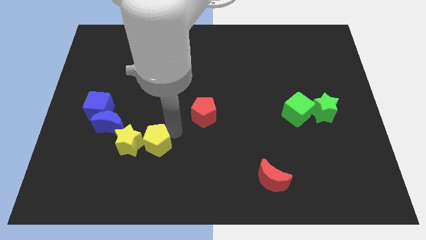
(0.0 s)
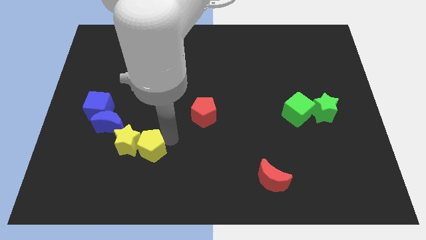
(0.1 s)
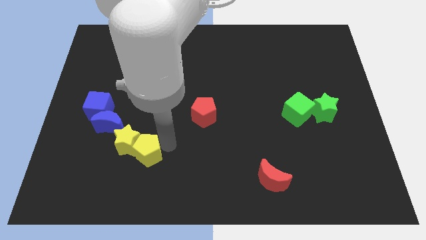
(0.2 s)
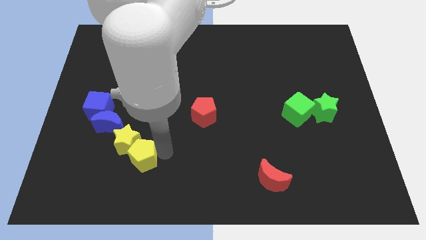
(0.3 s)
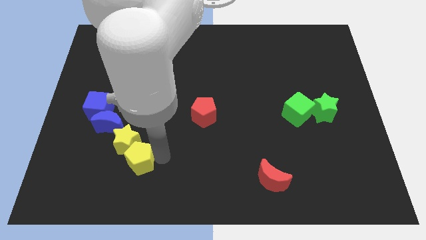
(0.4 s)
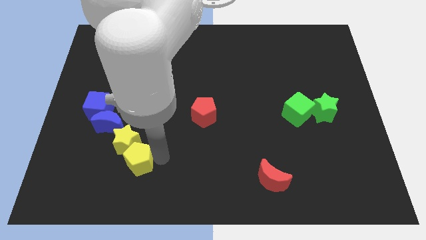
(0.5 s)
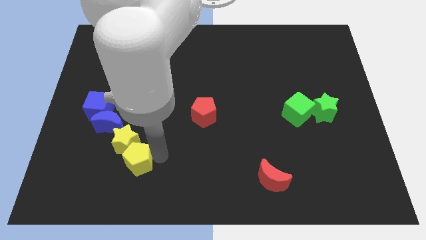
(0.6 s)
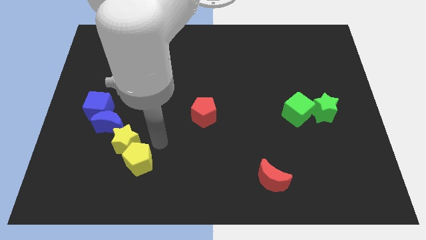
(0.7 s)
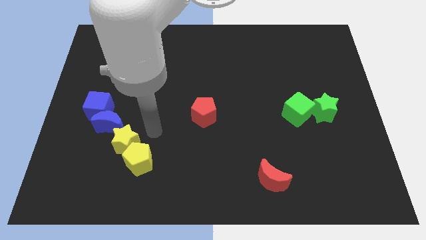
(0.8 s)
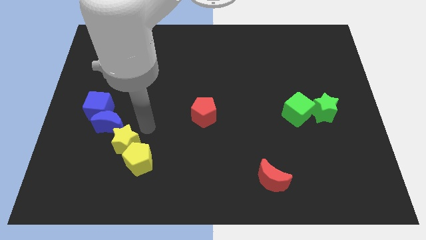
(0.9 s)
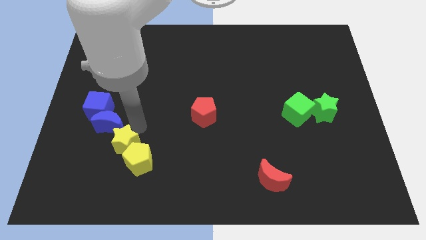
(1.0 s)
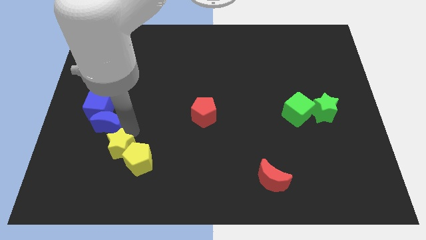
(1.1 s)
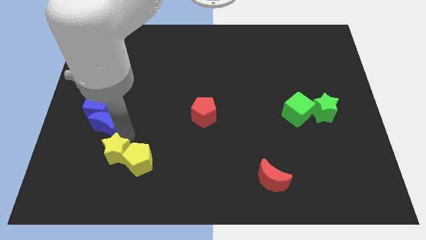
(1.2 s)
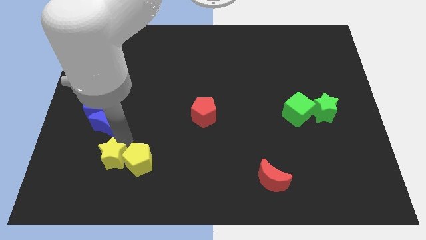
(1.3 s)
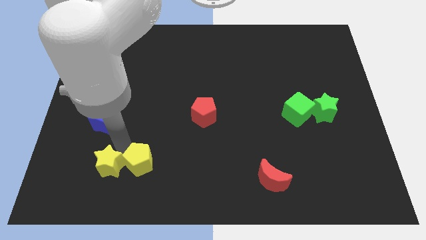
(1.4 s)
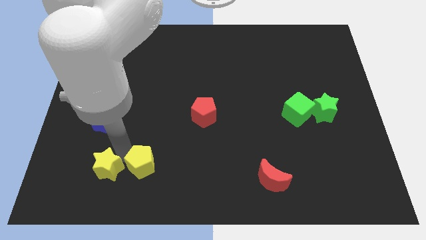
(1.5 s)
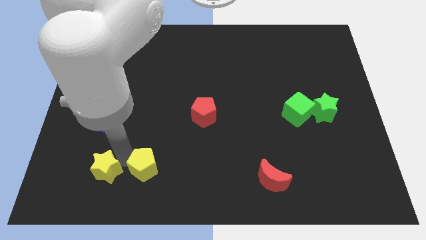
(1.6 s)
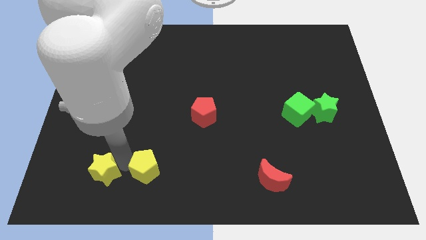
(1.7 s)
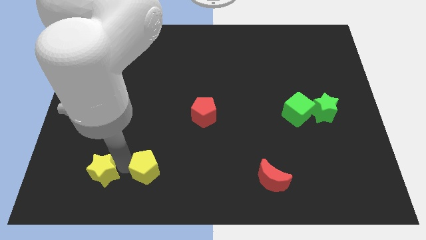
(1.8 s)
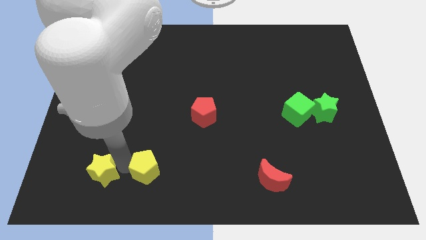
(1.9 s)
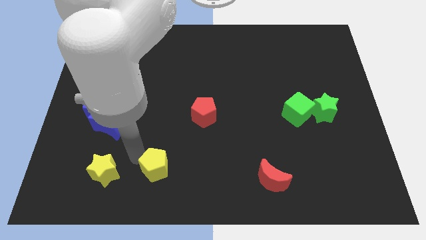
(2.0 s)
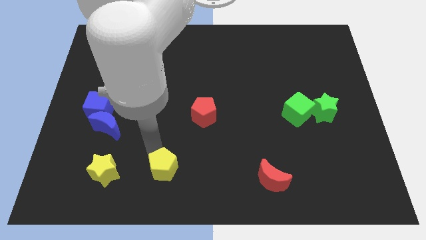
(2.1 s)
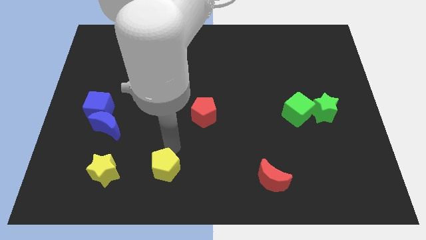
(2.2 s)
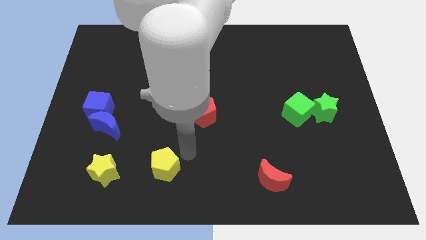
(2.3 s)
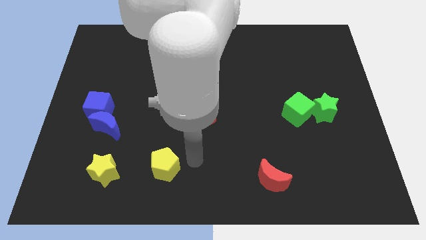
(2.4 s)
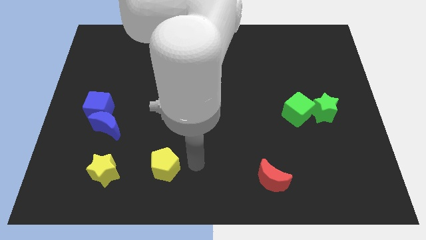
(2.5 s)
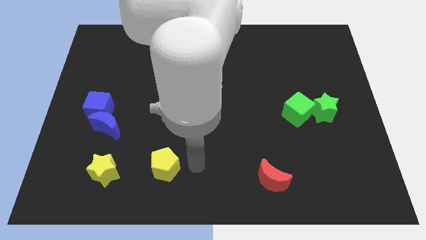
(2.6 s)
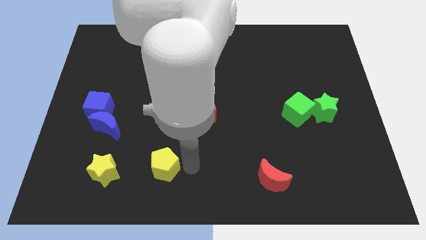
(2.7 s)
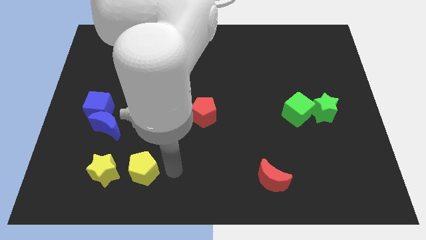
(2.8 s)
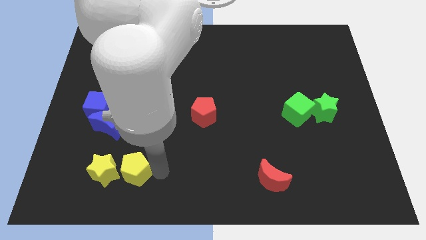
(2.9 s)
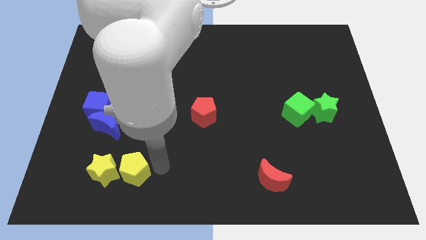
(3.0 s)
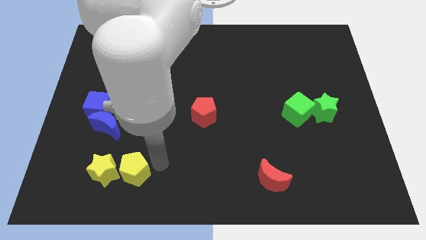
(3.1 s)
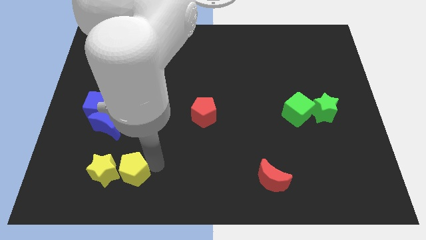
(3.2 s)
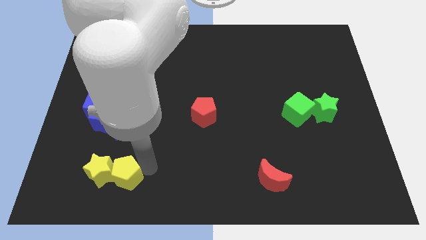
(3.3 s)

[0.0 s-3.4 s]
move the yellow blocks to the bottom side of the blue blocks

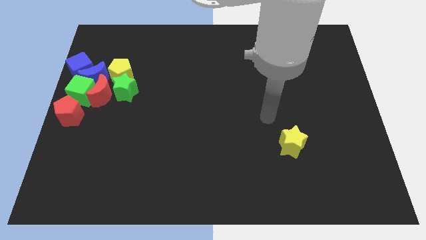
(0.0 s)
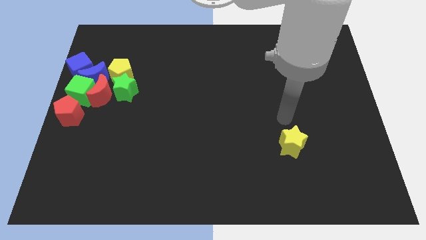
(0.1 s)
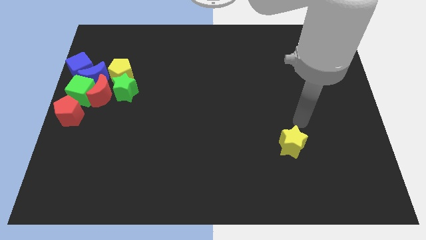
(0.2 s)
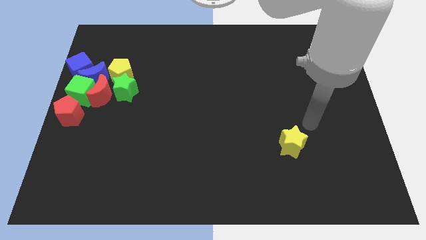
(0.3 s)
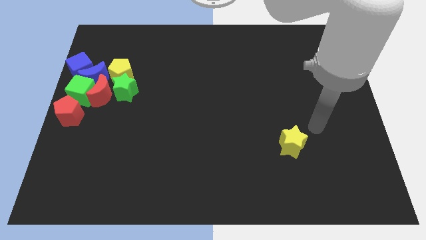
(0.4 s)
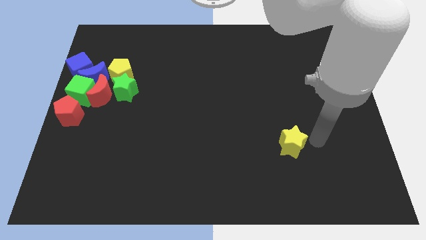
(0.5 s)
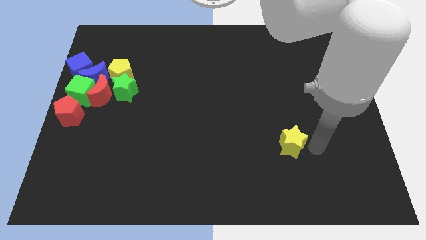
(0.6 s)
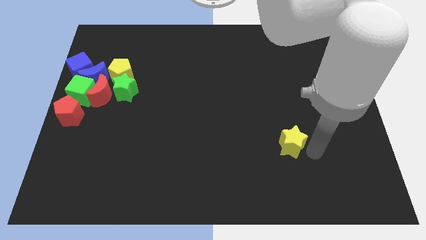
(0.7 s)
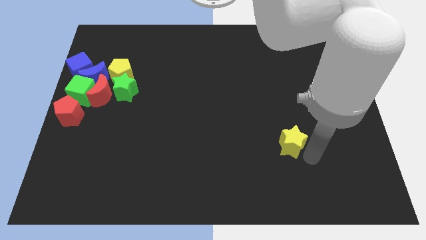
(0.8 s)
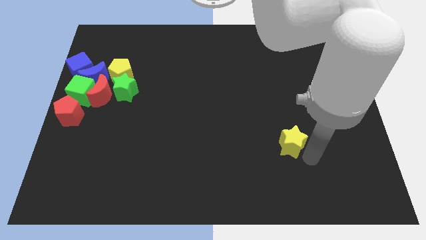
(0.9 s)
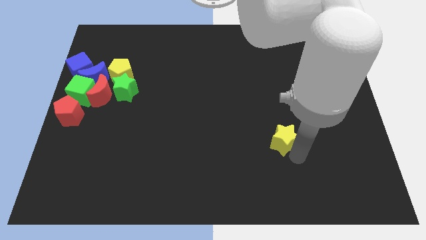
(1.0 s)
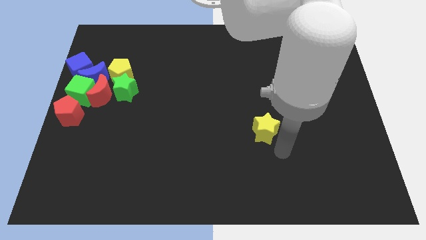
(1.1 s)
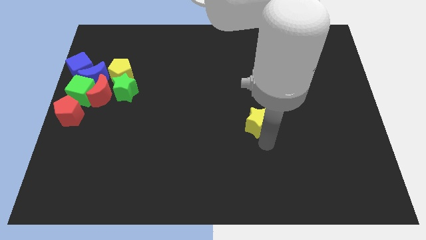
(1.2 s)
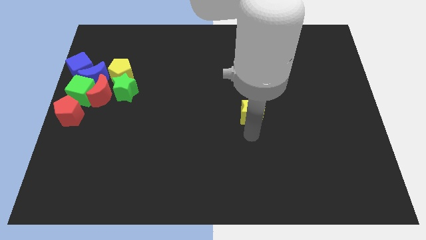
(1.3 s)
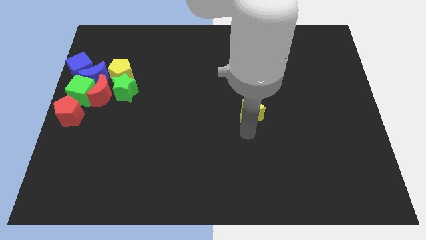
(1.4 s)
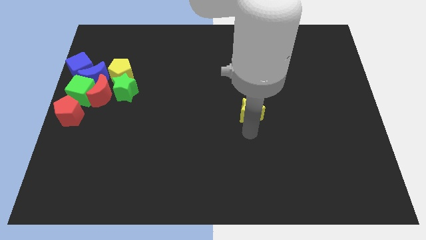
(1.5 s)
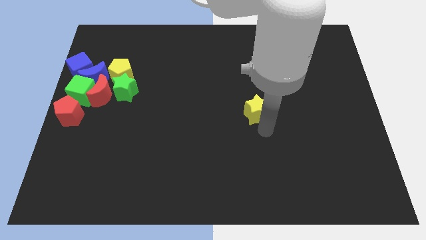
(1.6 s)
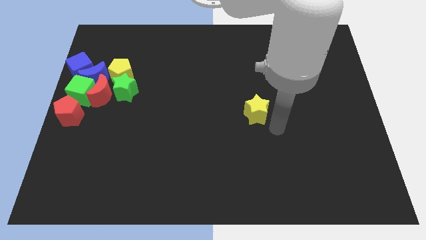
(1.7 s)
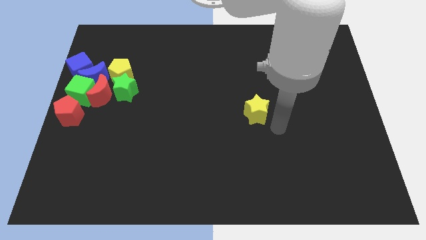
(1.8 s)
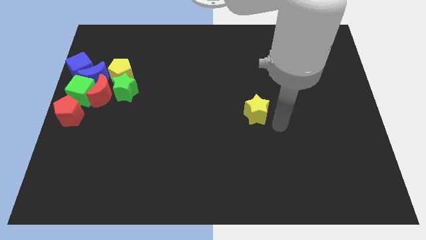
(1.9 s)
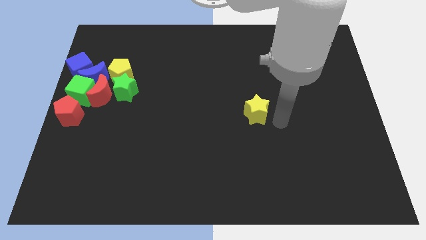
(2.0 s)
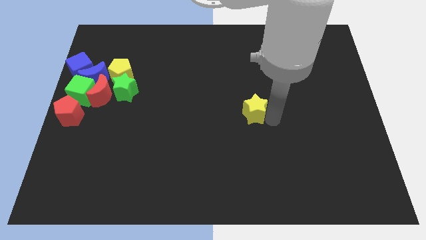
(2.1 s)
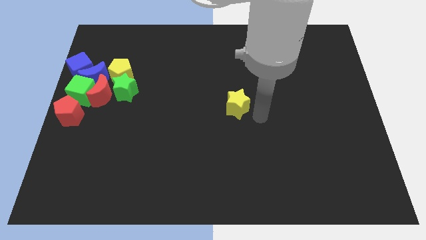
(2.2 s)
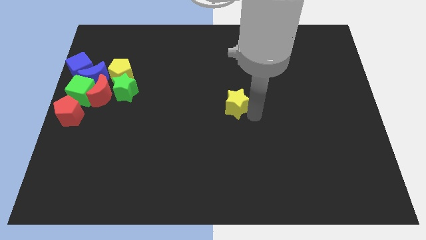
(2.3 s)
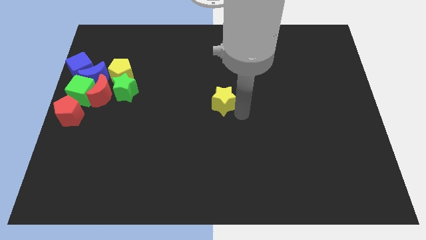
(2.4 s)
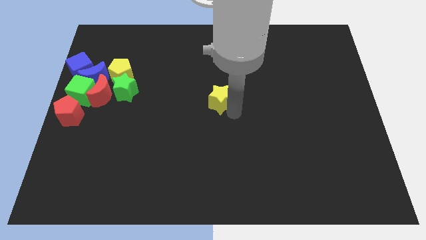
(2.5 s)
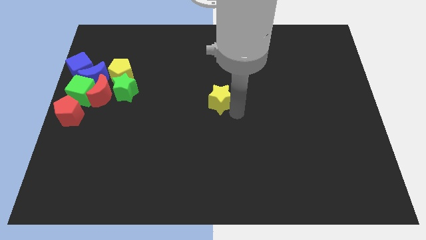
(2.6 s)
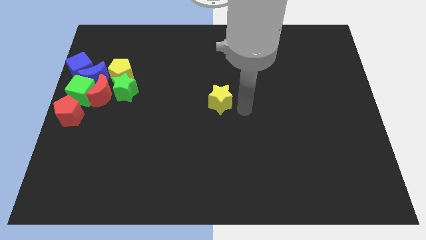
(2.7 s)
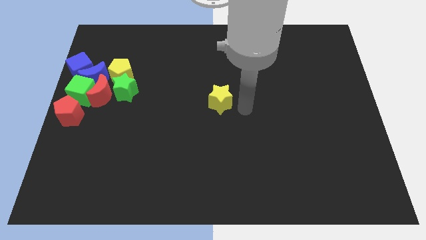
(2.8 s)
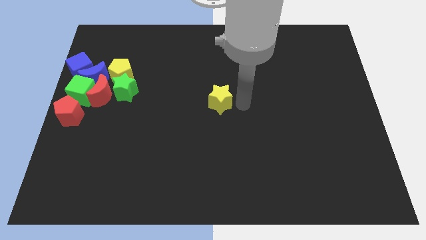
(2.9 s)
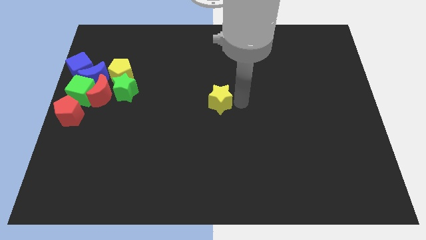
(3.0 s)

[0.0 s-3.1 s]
place the yellow star at the center of the board

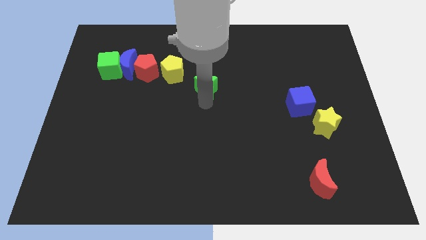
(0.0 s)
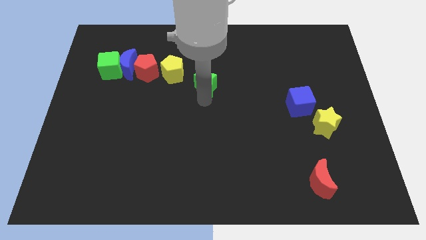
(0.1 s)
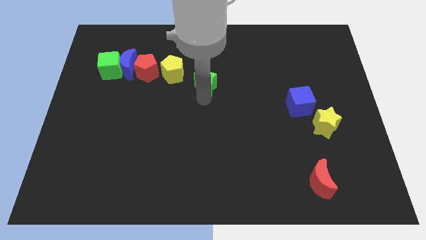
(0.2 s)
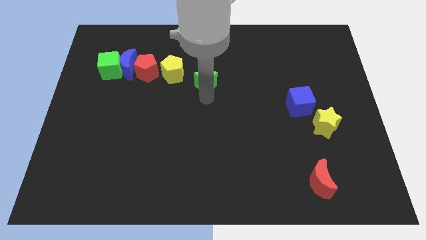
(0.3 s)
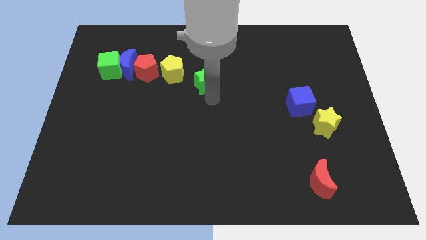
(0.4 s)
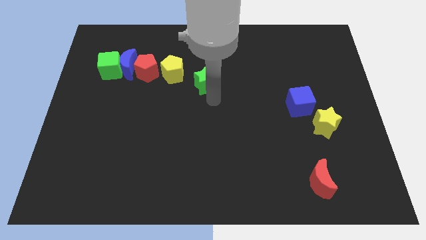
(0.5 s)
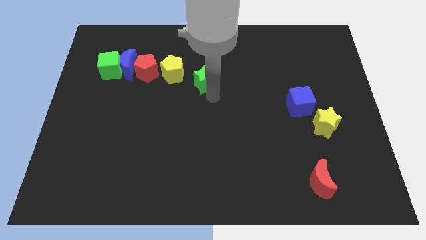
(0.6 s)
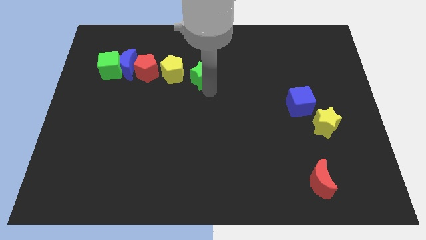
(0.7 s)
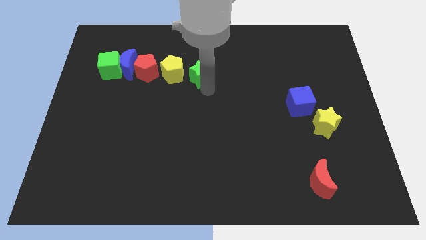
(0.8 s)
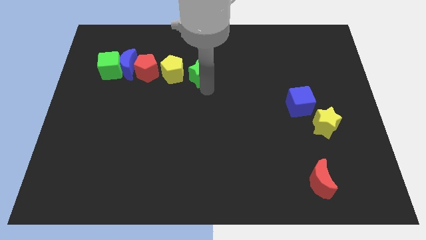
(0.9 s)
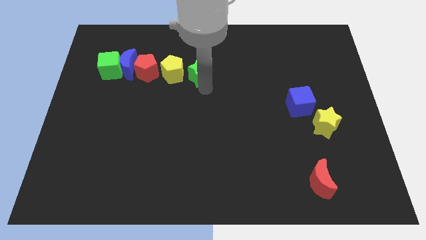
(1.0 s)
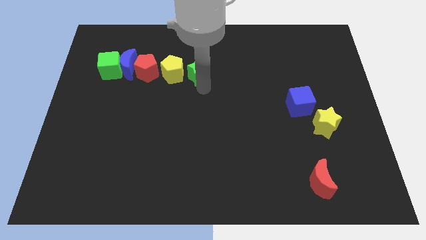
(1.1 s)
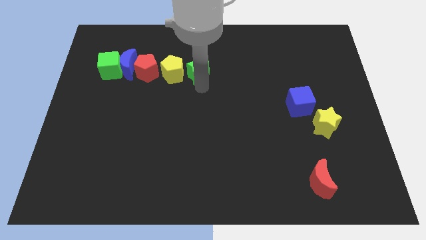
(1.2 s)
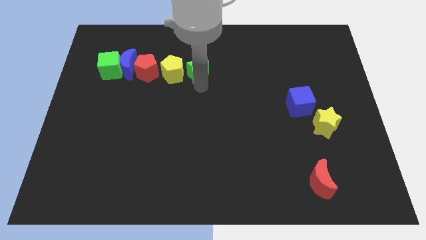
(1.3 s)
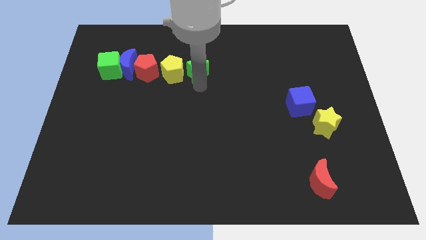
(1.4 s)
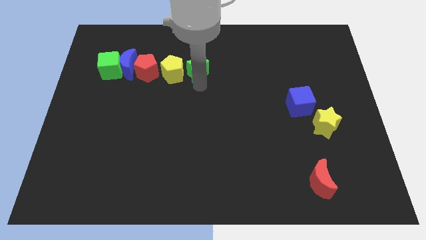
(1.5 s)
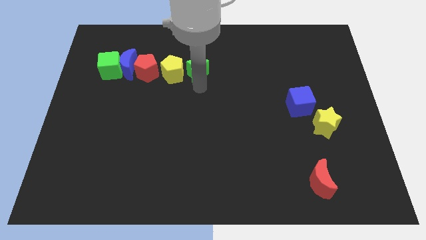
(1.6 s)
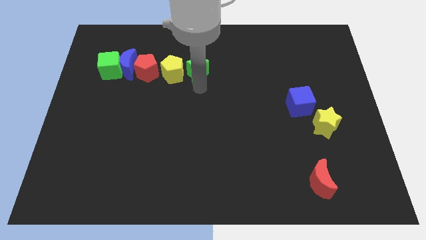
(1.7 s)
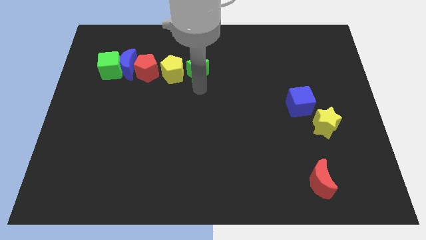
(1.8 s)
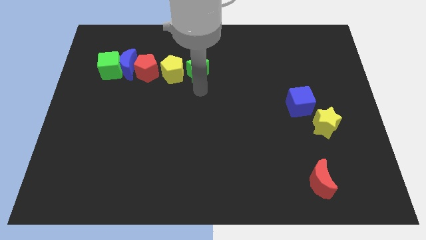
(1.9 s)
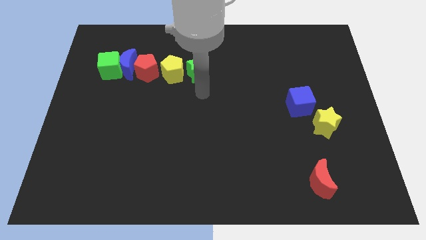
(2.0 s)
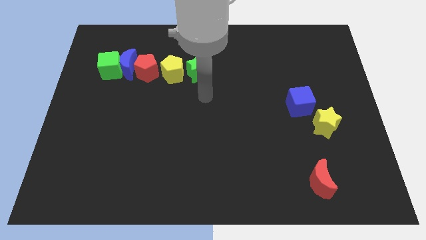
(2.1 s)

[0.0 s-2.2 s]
push the green star right to the yellow pentagon

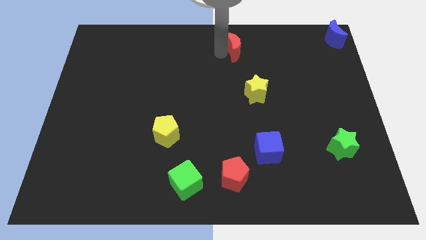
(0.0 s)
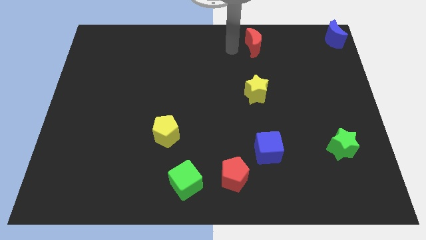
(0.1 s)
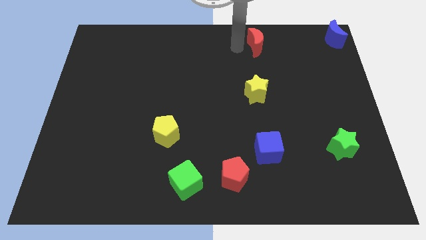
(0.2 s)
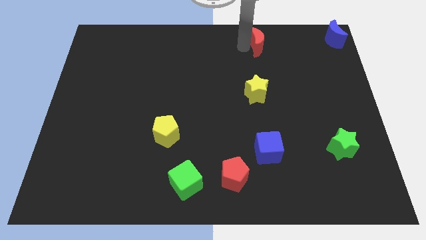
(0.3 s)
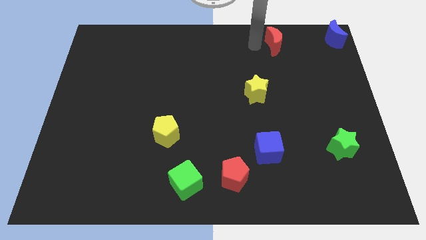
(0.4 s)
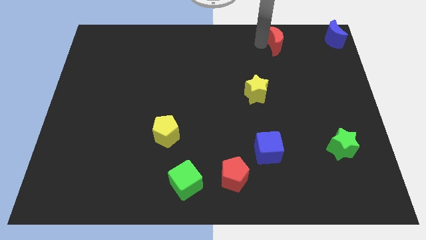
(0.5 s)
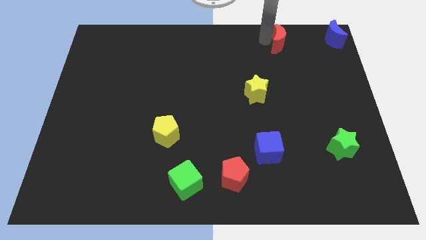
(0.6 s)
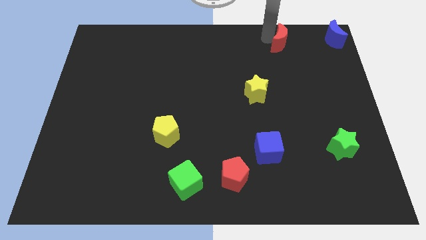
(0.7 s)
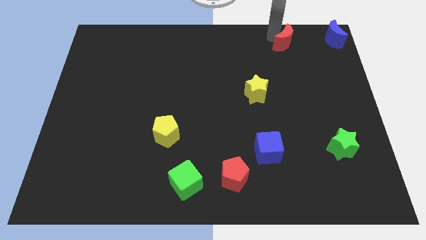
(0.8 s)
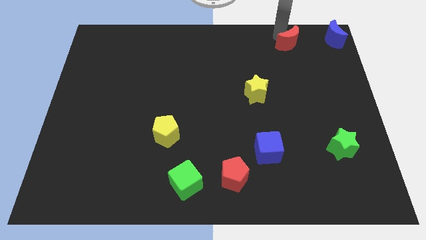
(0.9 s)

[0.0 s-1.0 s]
move the red crescent to the top right of the yellow star
